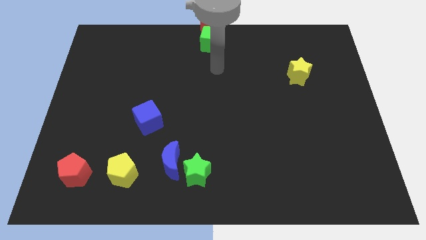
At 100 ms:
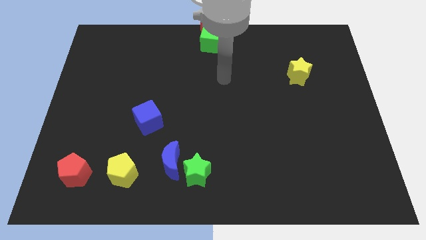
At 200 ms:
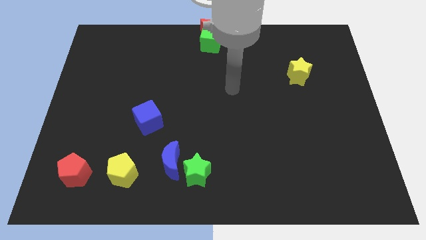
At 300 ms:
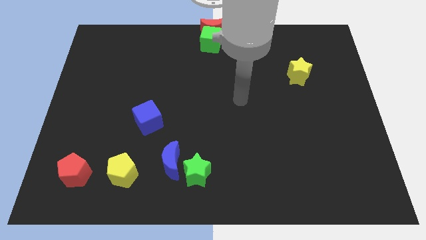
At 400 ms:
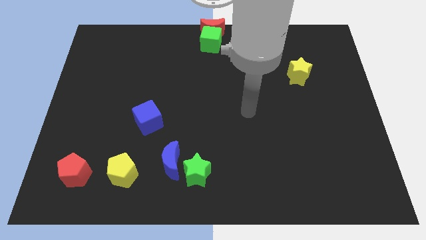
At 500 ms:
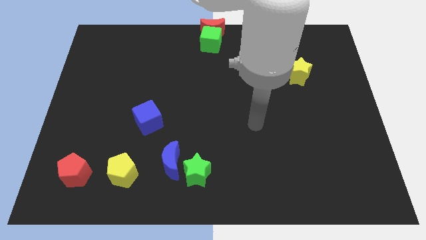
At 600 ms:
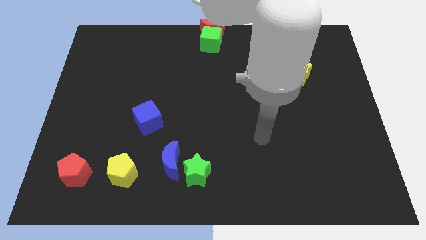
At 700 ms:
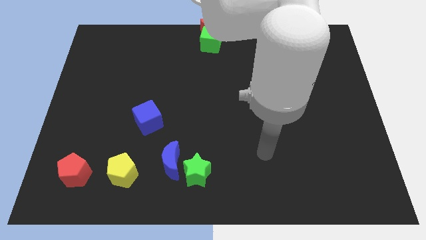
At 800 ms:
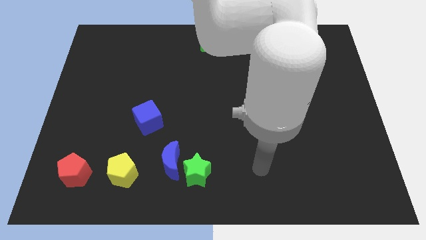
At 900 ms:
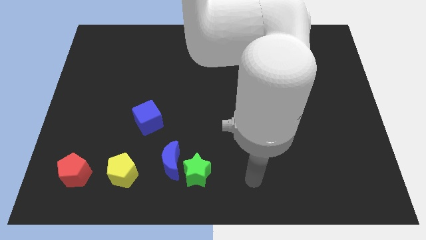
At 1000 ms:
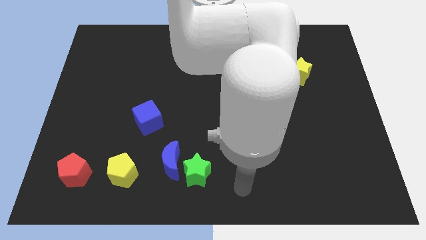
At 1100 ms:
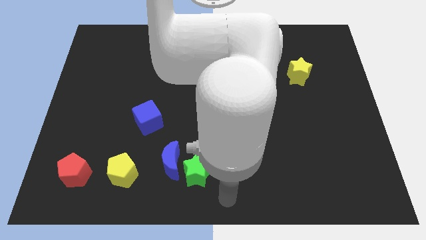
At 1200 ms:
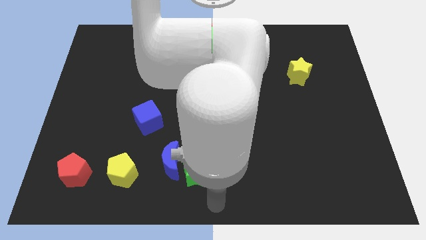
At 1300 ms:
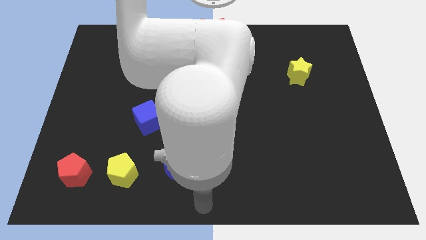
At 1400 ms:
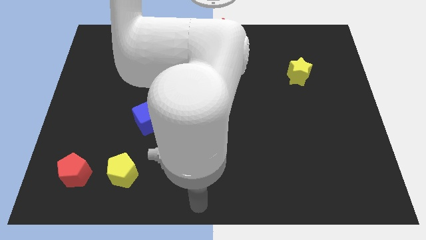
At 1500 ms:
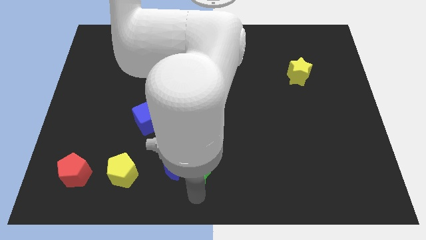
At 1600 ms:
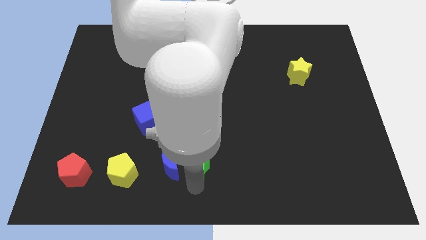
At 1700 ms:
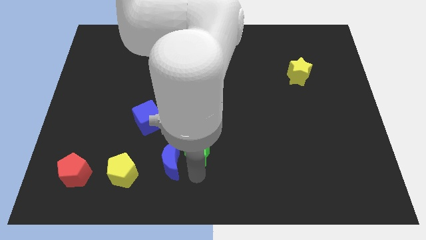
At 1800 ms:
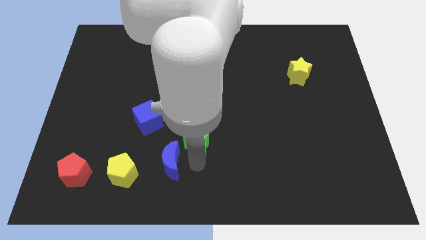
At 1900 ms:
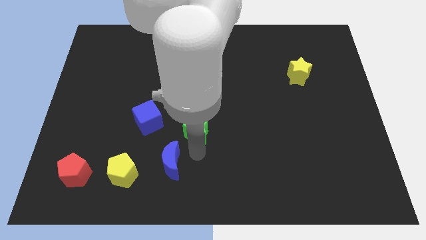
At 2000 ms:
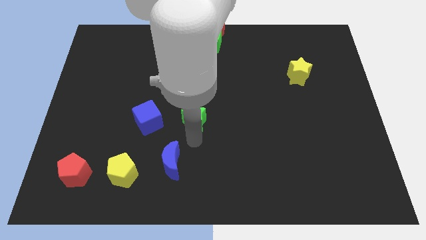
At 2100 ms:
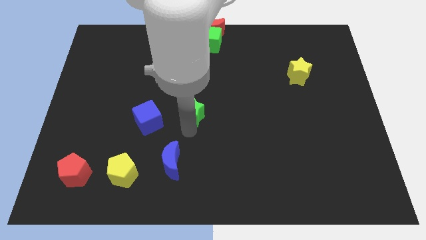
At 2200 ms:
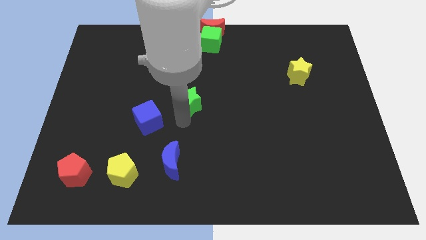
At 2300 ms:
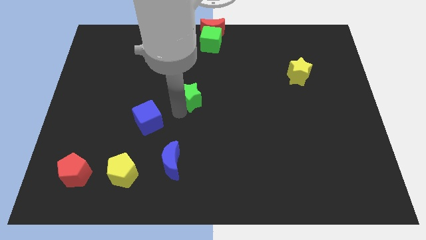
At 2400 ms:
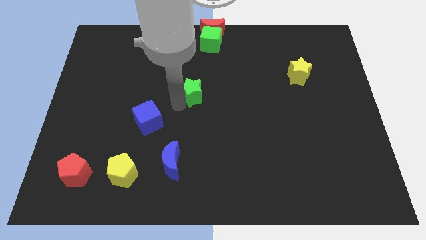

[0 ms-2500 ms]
place green star to the center of the board

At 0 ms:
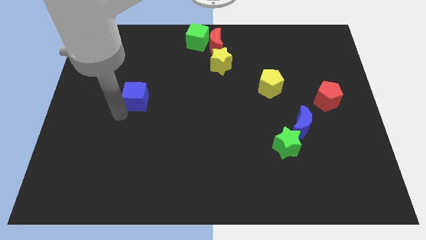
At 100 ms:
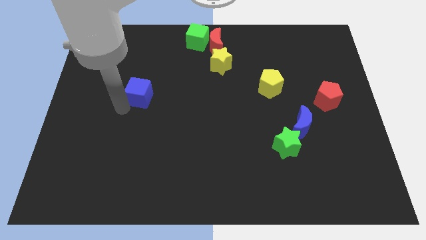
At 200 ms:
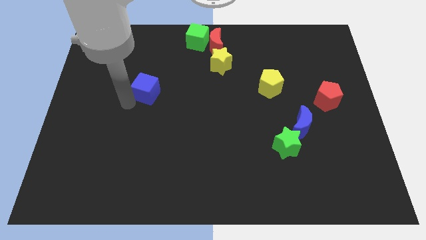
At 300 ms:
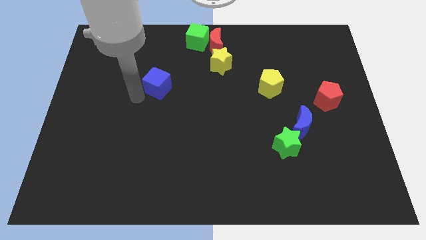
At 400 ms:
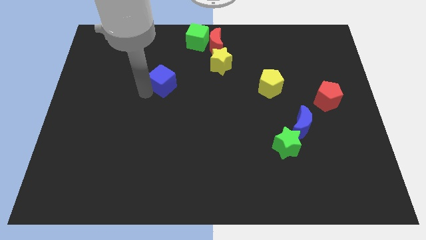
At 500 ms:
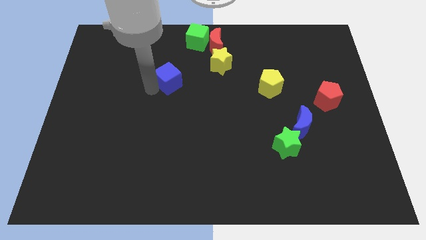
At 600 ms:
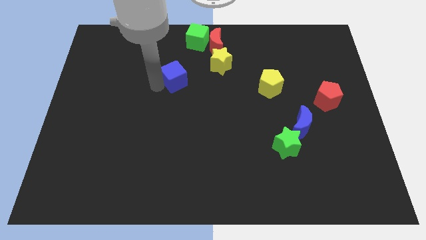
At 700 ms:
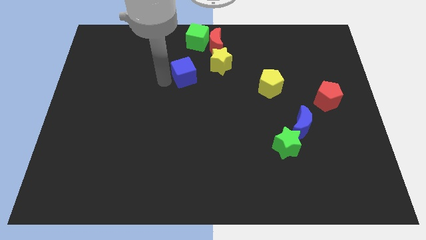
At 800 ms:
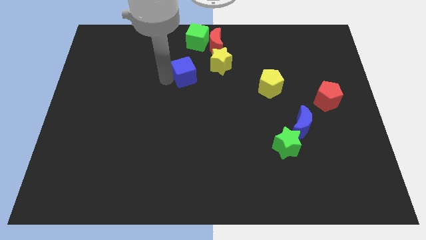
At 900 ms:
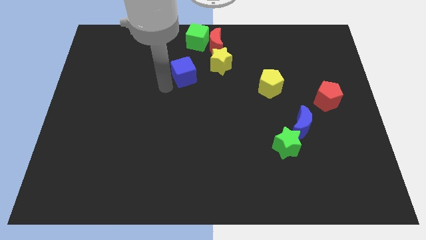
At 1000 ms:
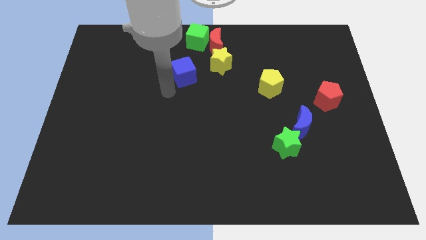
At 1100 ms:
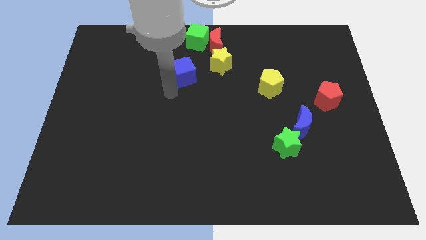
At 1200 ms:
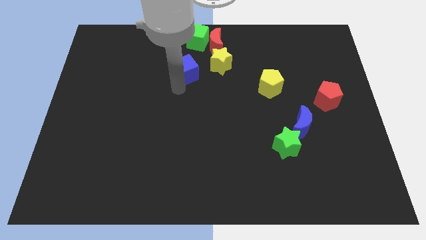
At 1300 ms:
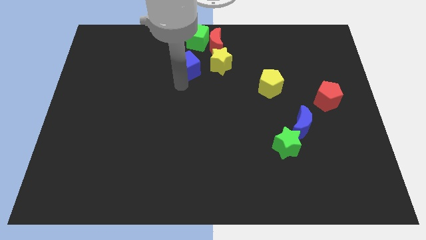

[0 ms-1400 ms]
place blue cube to the left of yellow star

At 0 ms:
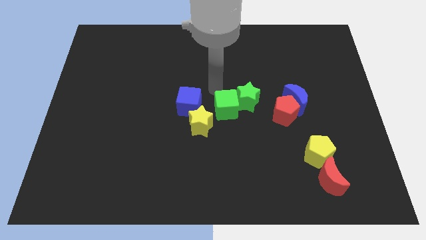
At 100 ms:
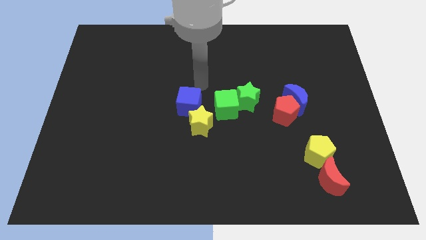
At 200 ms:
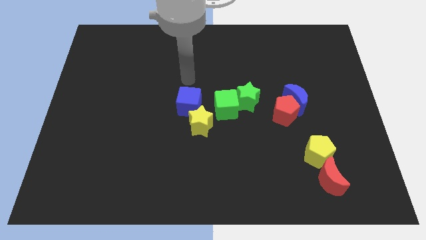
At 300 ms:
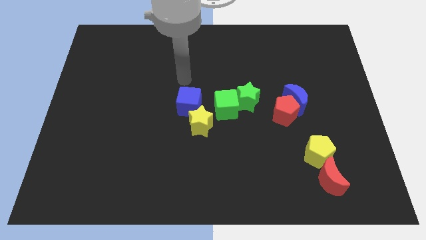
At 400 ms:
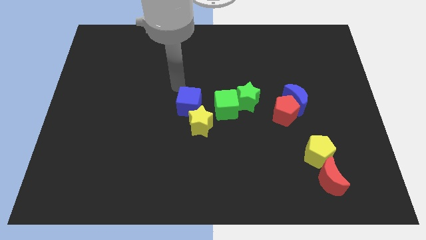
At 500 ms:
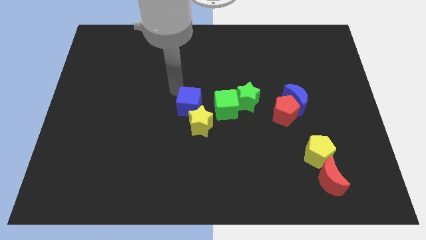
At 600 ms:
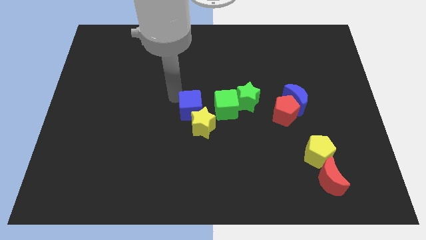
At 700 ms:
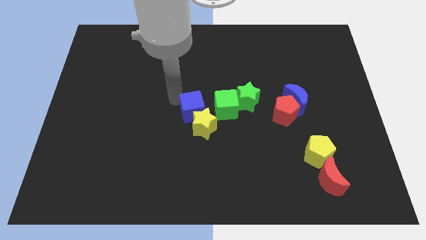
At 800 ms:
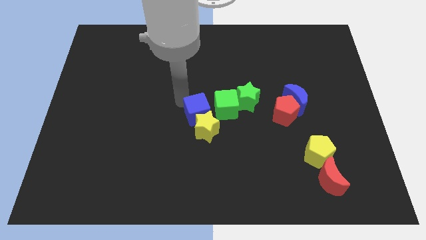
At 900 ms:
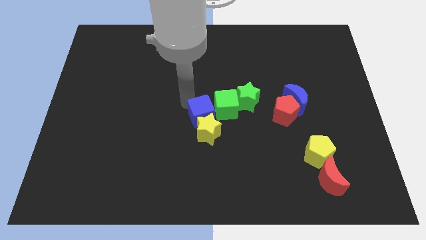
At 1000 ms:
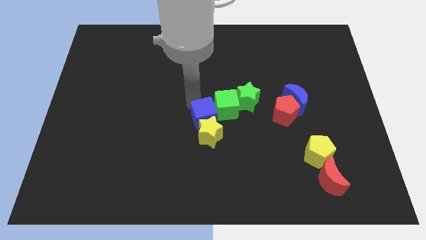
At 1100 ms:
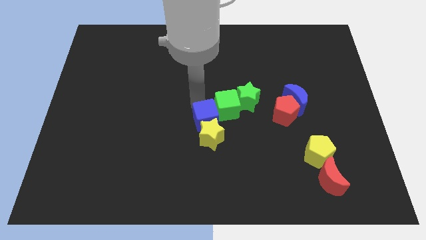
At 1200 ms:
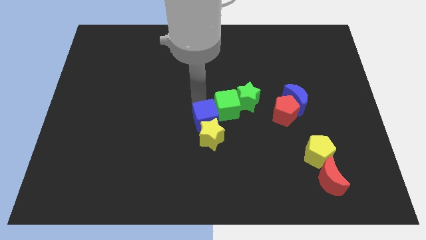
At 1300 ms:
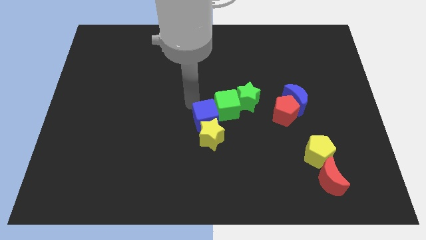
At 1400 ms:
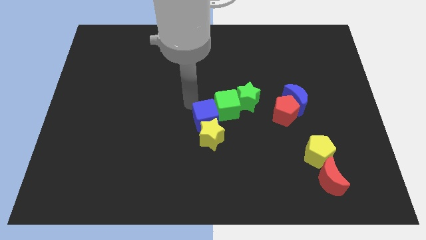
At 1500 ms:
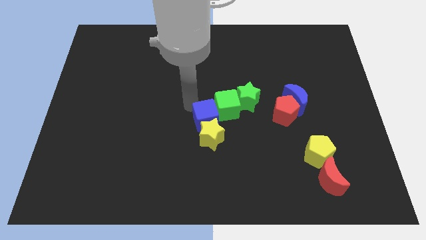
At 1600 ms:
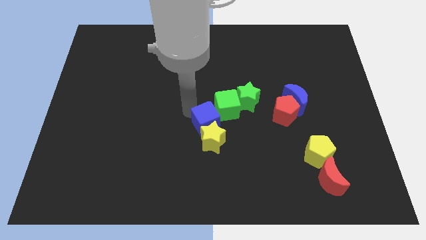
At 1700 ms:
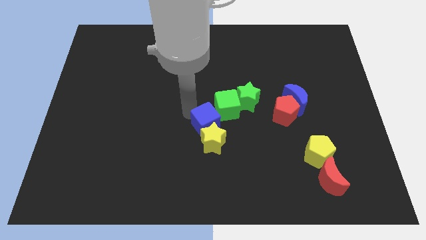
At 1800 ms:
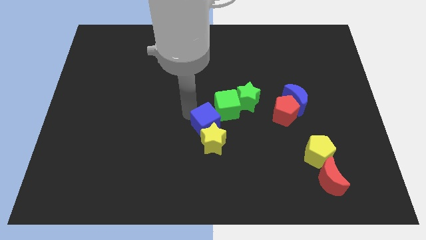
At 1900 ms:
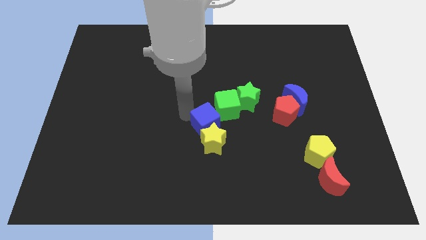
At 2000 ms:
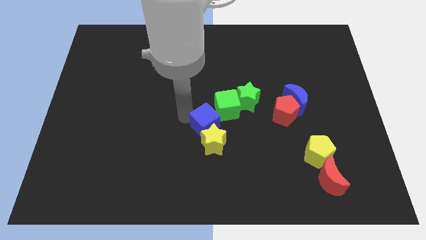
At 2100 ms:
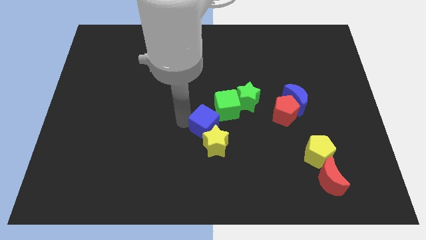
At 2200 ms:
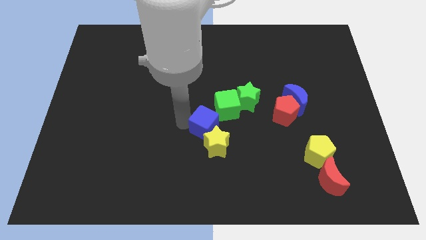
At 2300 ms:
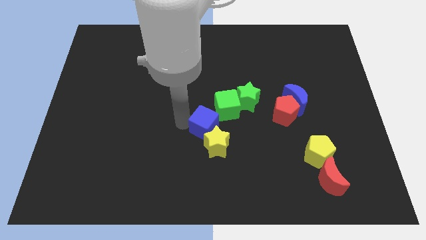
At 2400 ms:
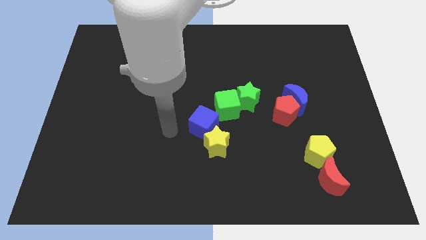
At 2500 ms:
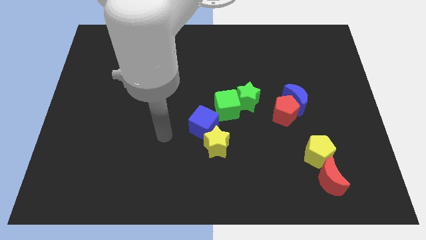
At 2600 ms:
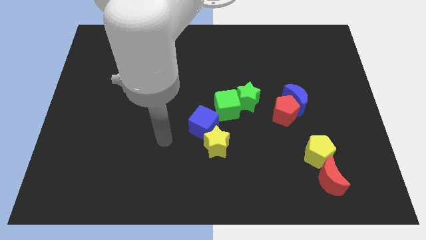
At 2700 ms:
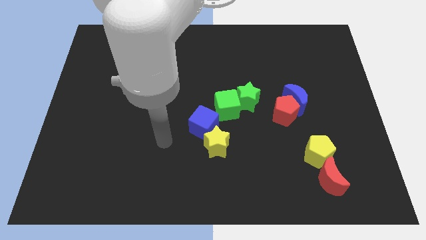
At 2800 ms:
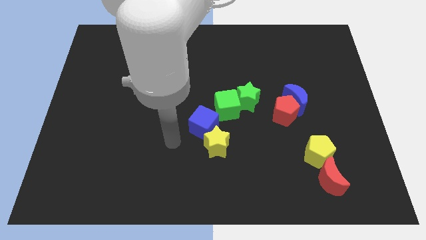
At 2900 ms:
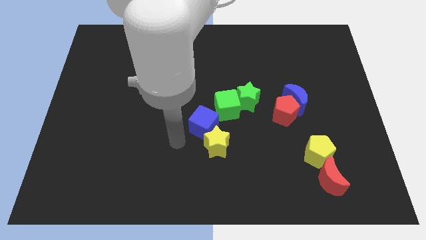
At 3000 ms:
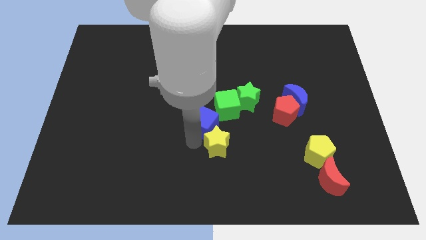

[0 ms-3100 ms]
push the blue cube into the yellow star

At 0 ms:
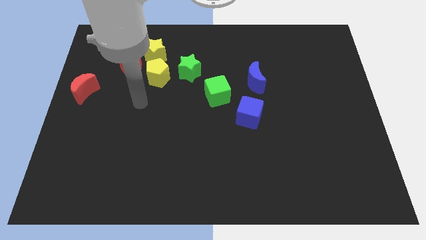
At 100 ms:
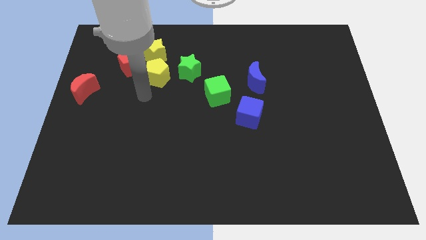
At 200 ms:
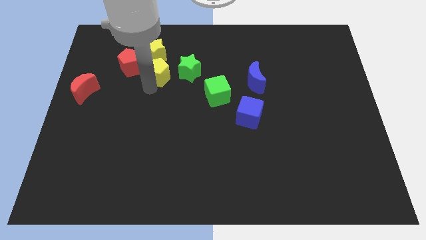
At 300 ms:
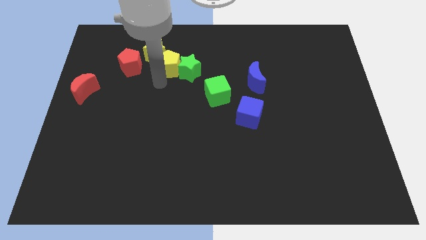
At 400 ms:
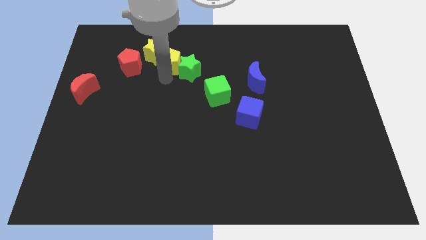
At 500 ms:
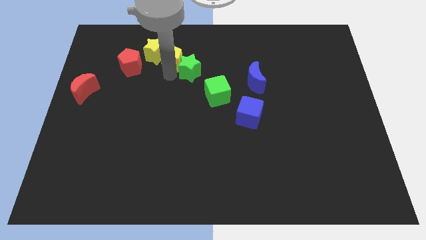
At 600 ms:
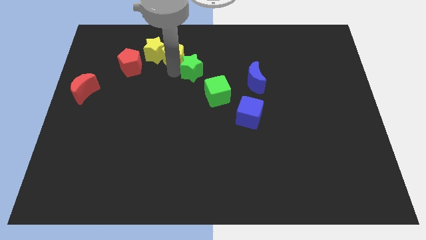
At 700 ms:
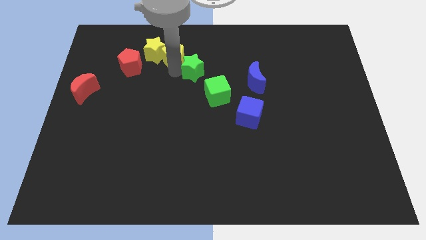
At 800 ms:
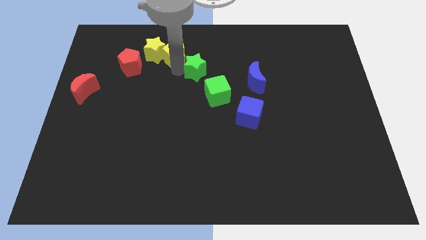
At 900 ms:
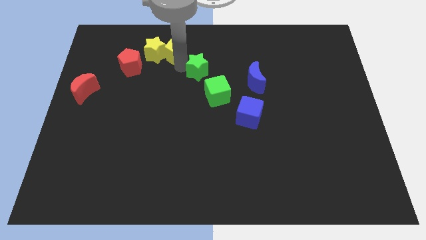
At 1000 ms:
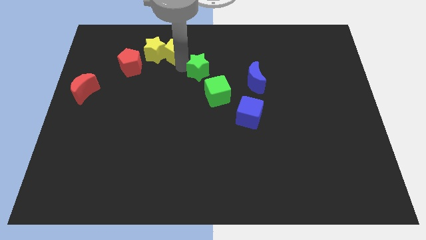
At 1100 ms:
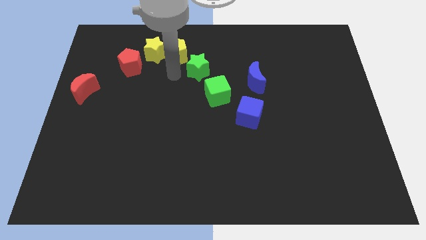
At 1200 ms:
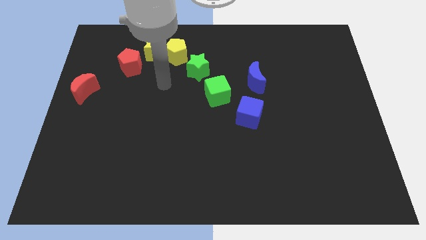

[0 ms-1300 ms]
move the yellow pentagon into the yellow star

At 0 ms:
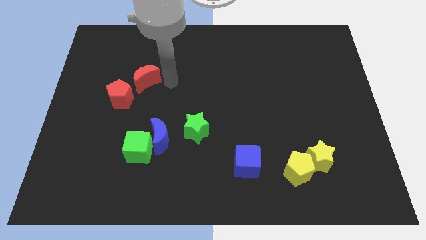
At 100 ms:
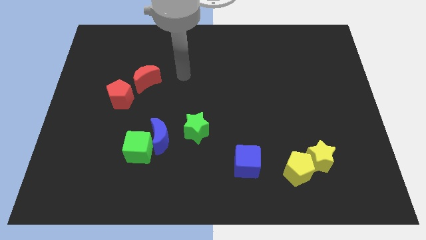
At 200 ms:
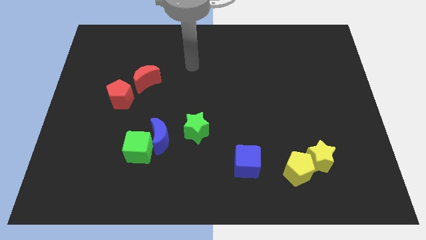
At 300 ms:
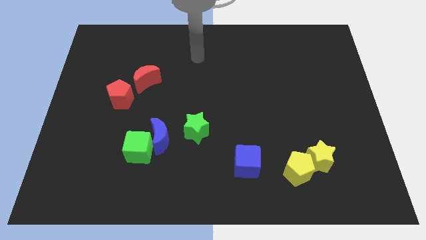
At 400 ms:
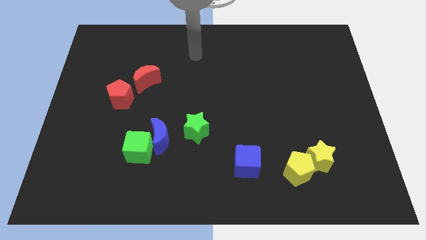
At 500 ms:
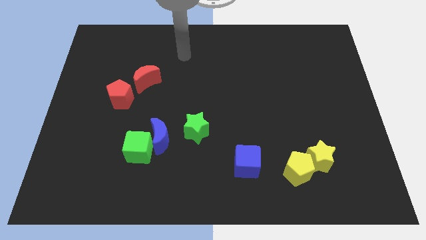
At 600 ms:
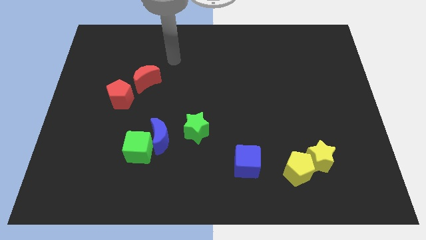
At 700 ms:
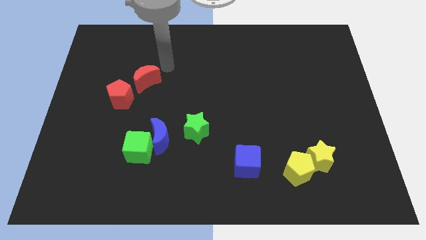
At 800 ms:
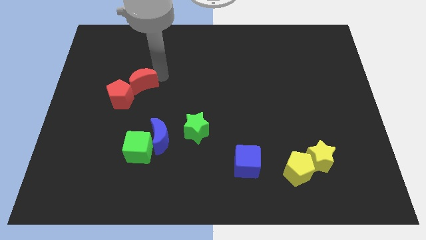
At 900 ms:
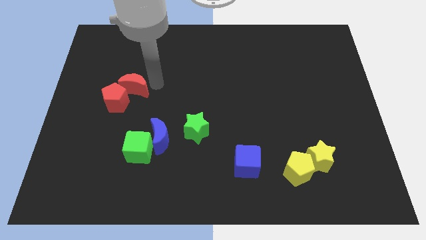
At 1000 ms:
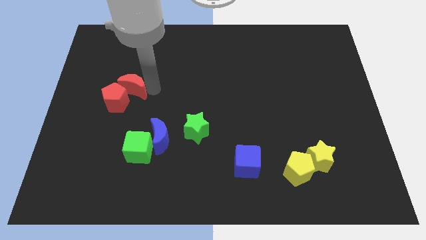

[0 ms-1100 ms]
push the red moon into red pentagon
